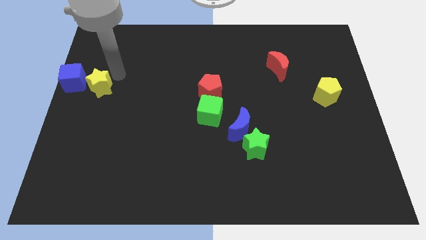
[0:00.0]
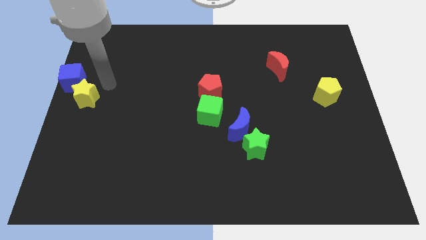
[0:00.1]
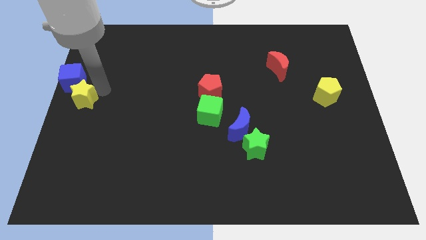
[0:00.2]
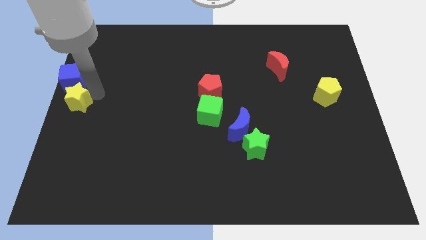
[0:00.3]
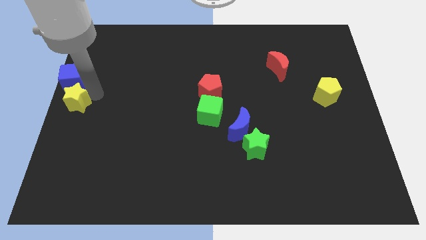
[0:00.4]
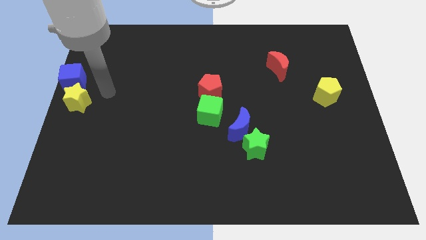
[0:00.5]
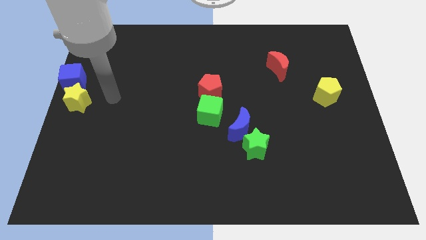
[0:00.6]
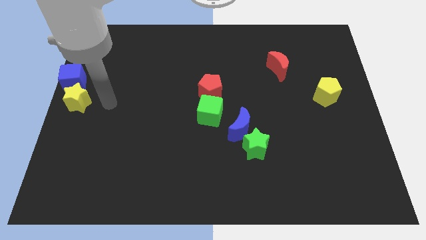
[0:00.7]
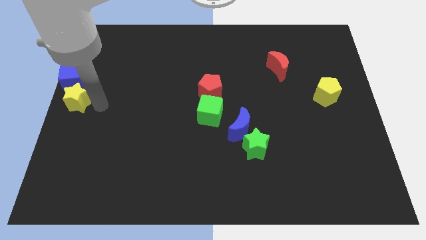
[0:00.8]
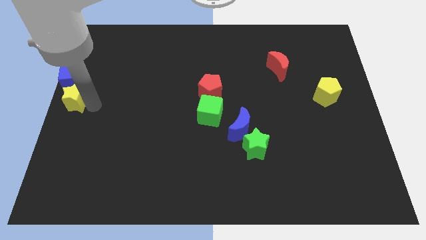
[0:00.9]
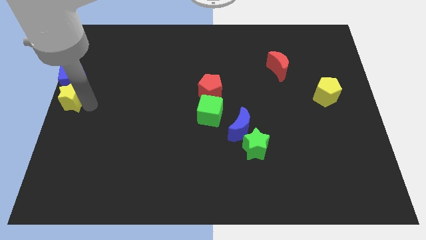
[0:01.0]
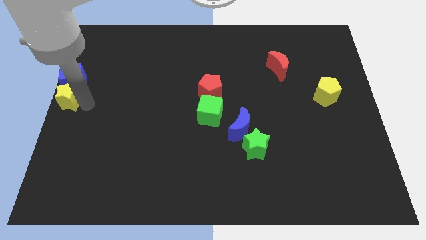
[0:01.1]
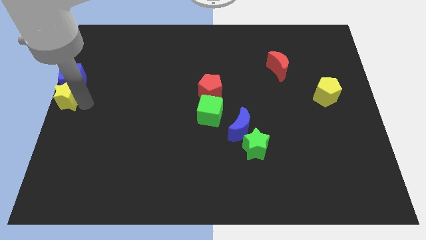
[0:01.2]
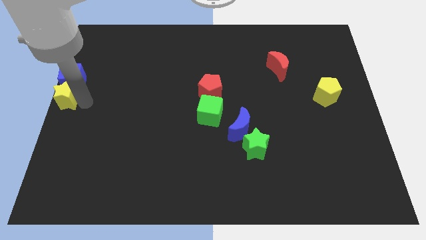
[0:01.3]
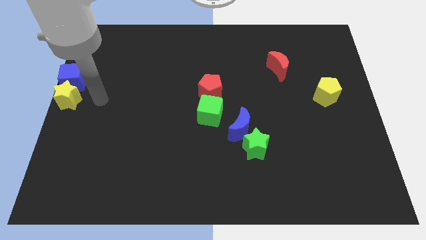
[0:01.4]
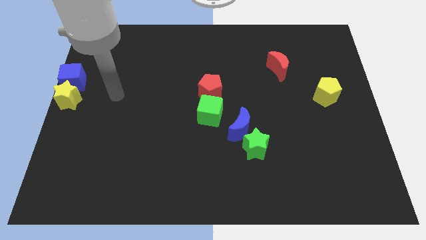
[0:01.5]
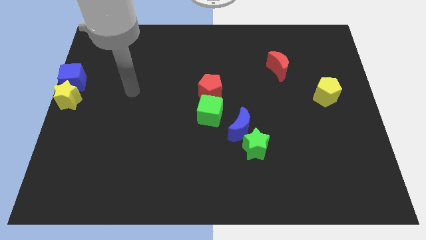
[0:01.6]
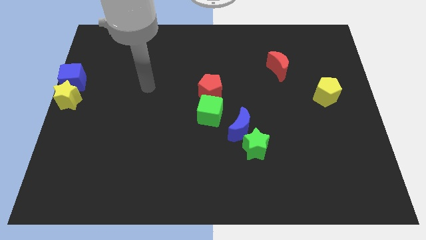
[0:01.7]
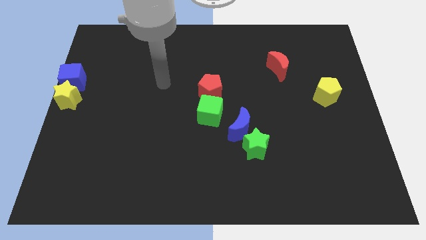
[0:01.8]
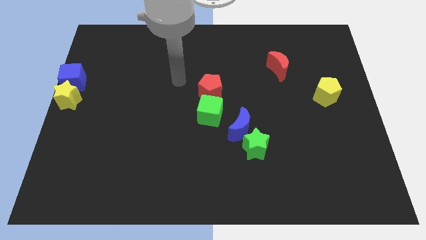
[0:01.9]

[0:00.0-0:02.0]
move the yellow star to the bottom of the blue cube

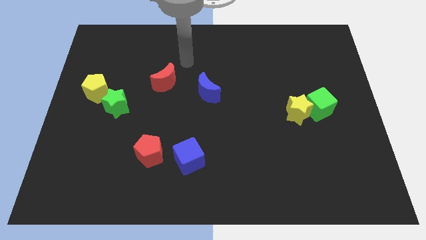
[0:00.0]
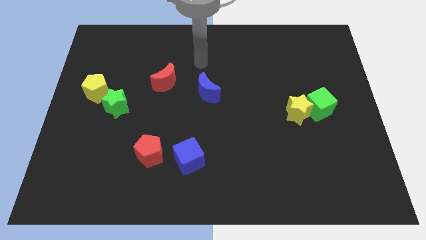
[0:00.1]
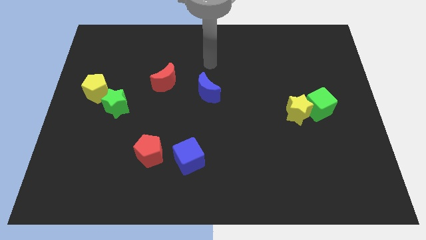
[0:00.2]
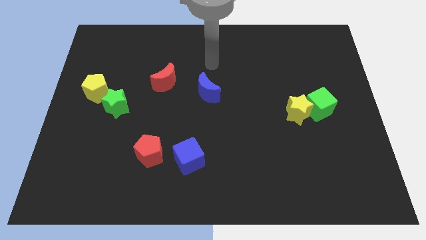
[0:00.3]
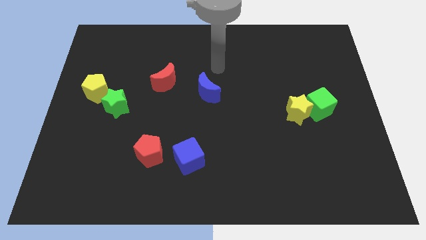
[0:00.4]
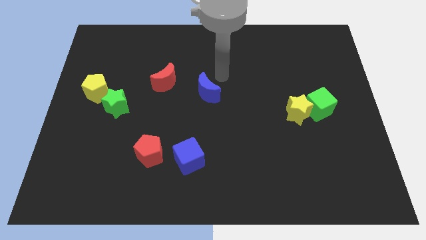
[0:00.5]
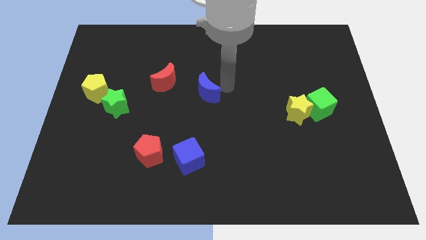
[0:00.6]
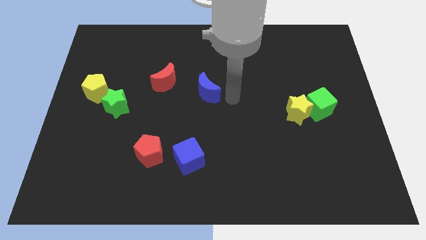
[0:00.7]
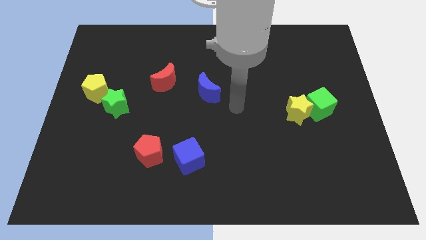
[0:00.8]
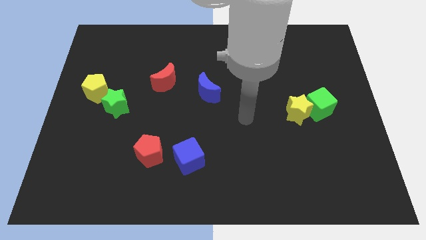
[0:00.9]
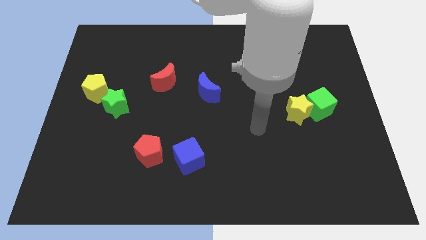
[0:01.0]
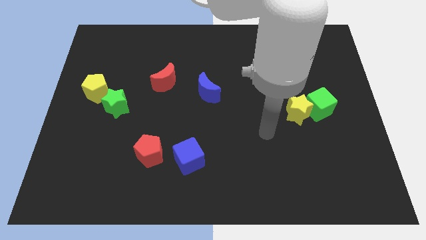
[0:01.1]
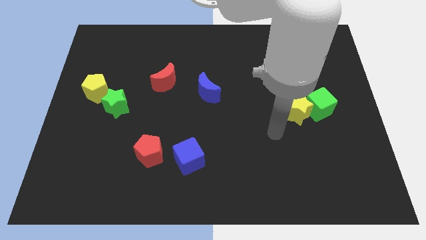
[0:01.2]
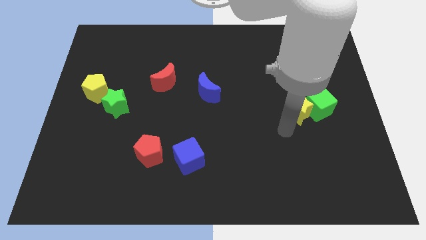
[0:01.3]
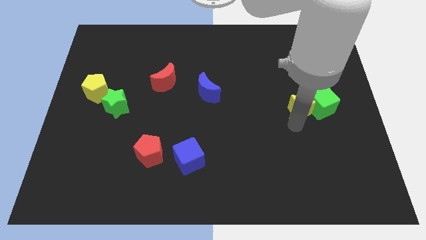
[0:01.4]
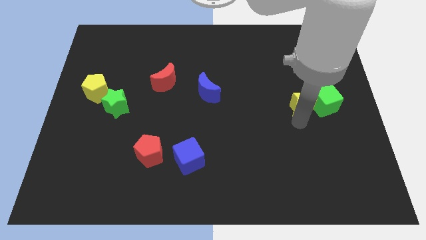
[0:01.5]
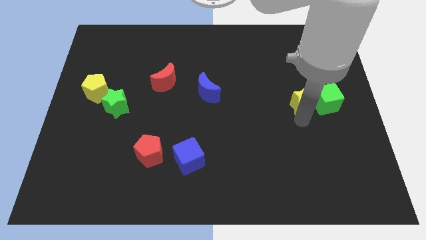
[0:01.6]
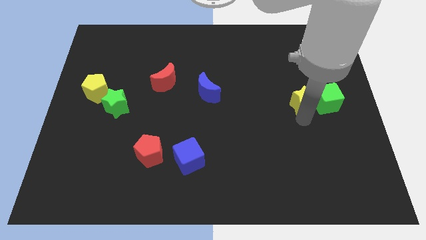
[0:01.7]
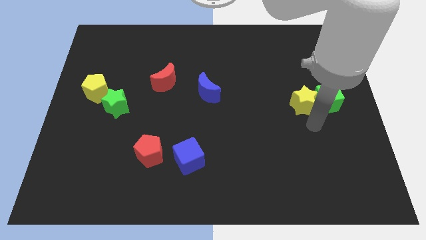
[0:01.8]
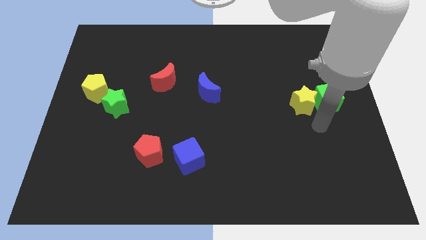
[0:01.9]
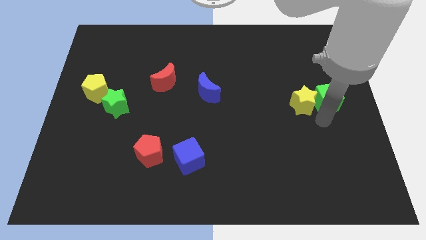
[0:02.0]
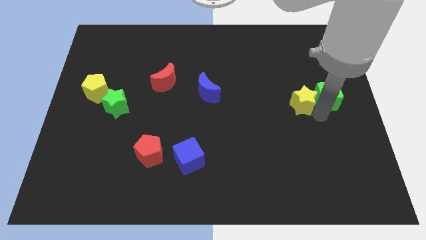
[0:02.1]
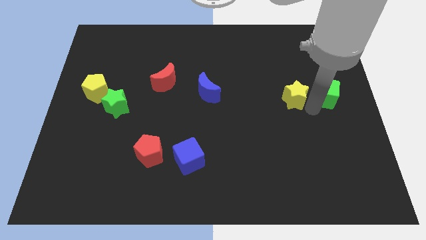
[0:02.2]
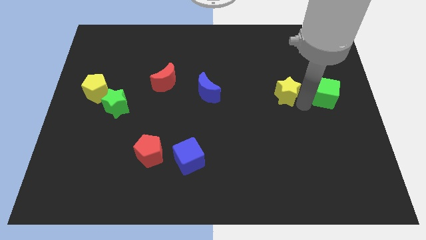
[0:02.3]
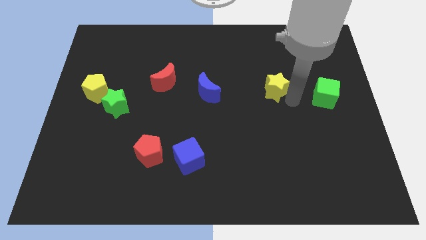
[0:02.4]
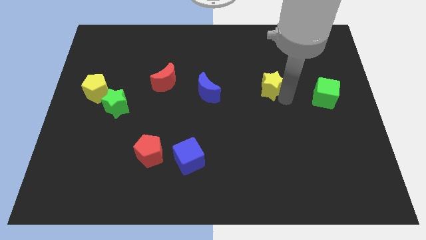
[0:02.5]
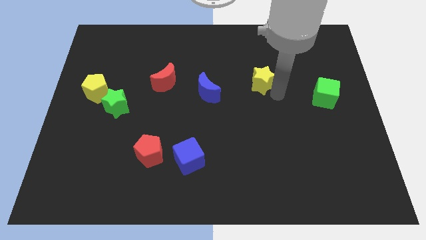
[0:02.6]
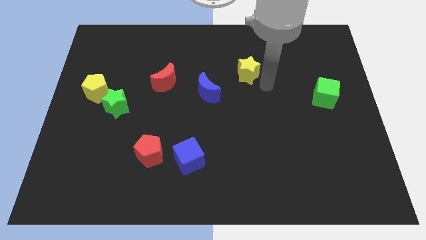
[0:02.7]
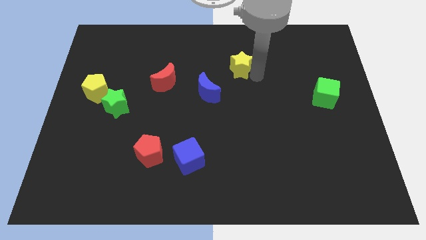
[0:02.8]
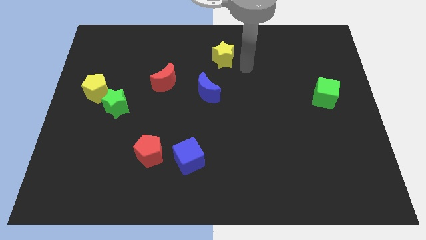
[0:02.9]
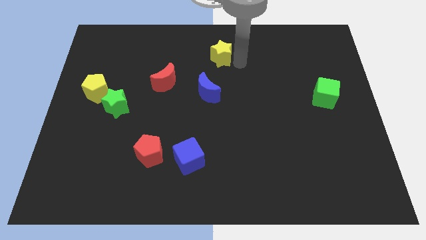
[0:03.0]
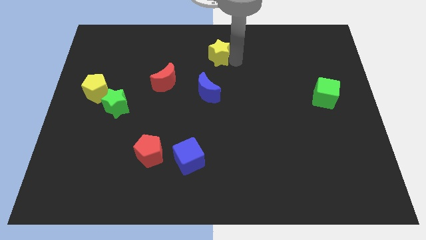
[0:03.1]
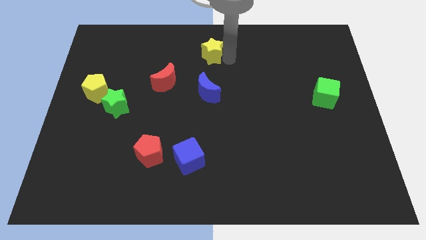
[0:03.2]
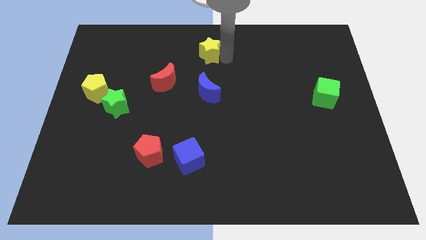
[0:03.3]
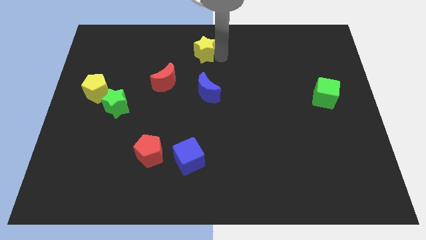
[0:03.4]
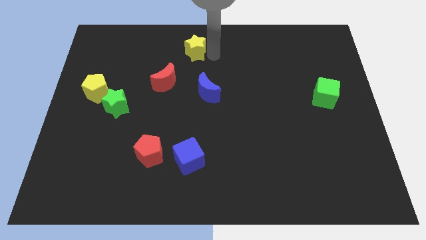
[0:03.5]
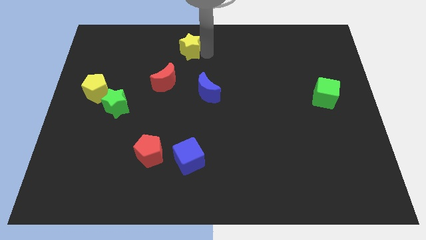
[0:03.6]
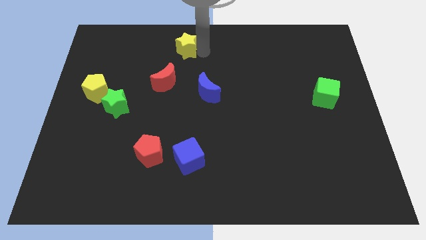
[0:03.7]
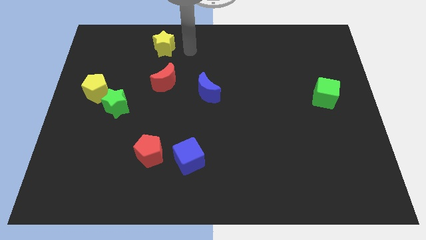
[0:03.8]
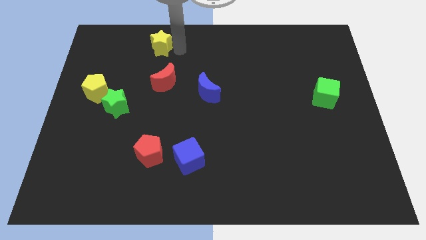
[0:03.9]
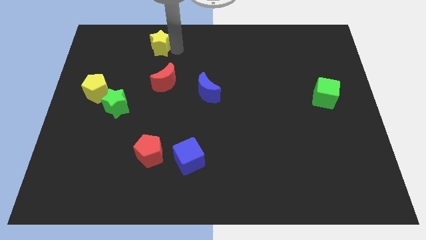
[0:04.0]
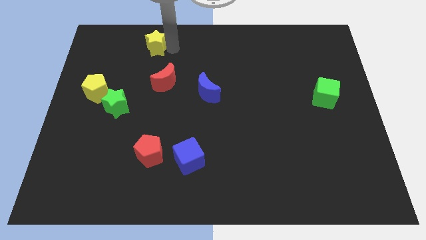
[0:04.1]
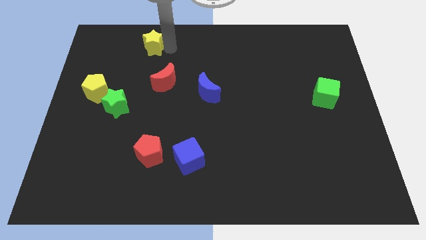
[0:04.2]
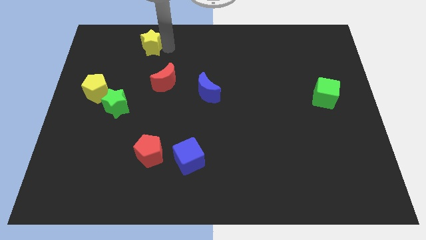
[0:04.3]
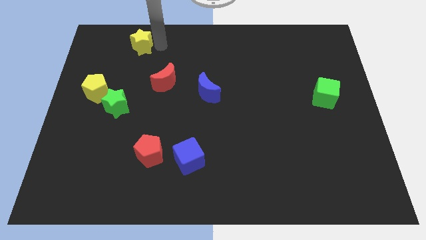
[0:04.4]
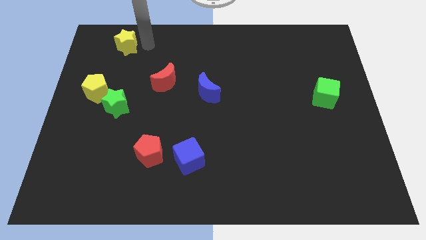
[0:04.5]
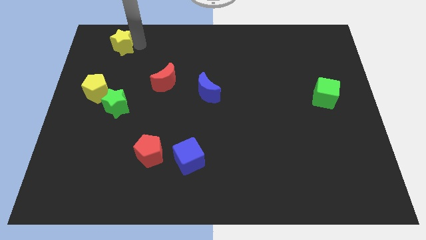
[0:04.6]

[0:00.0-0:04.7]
place the yellow star above the green star

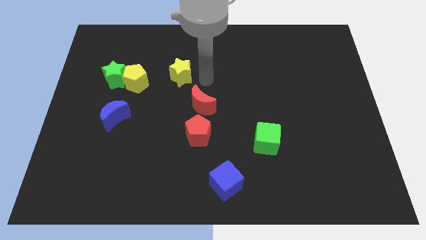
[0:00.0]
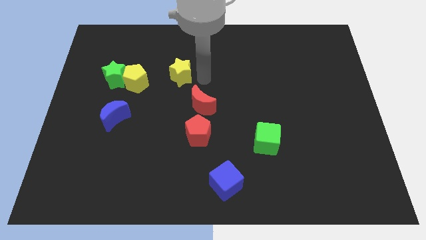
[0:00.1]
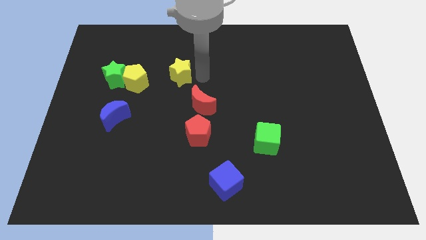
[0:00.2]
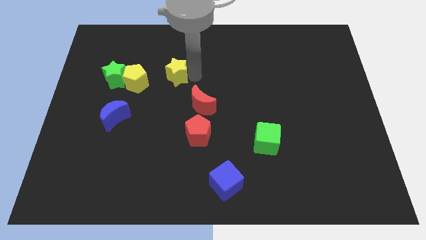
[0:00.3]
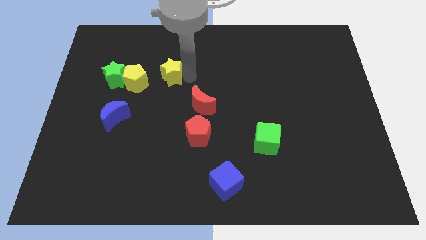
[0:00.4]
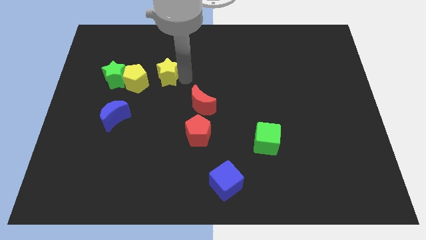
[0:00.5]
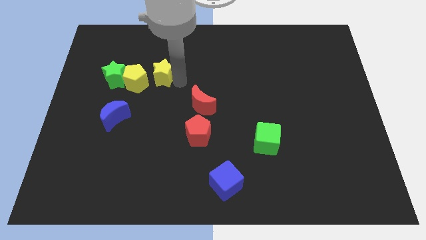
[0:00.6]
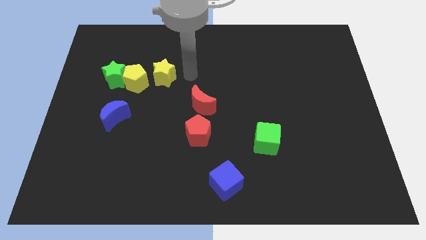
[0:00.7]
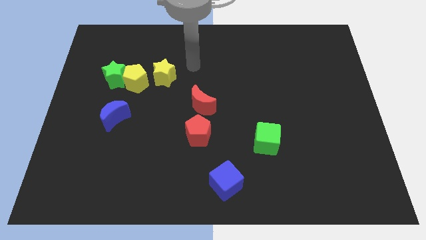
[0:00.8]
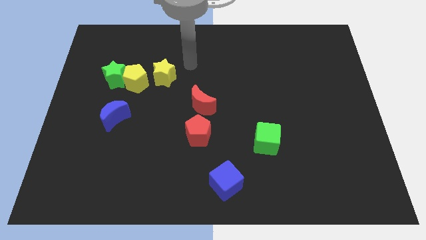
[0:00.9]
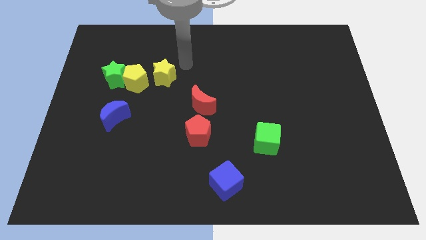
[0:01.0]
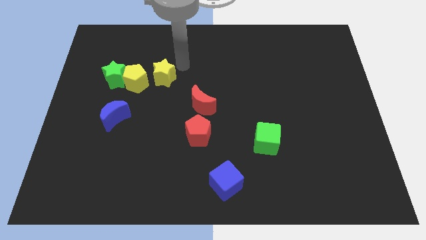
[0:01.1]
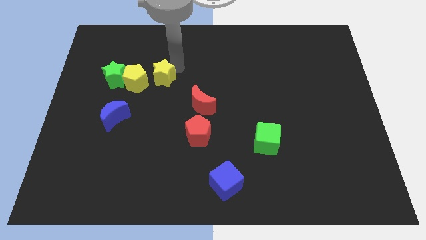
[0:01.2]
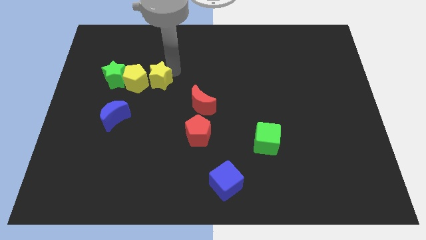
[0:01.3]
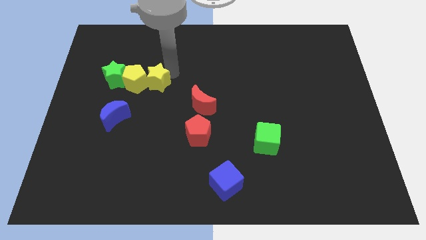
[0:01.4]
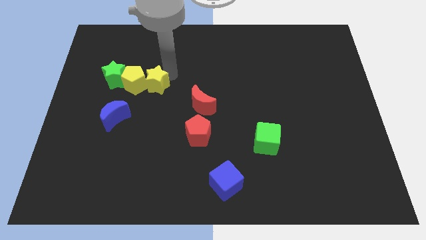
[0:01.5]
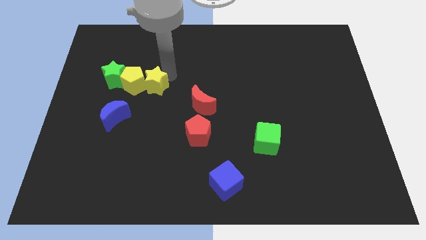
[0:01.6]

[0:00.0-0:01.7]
push the yellow star into the yellow pentagon

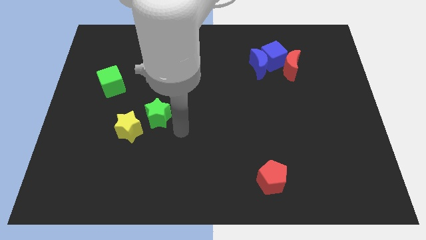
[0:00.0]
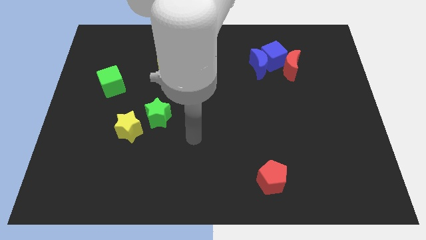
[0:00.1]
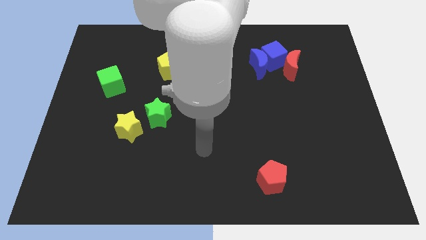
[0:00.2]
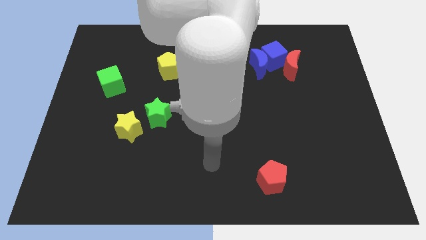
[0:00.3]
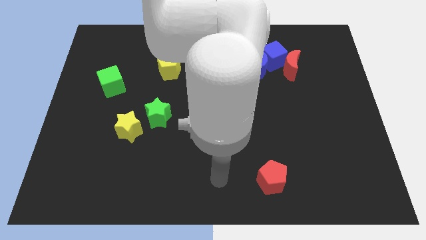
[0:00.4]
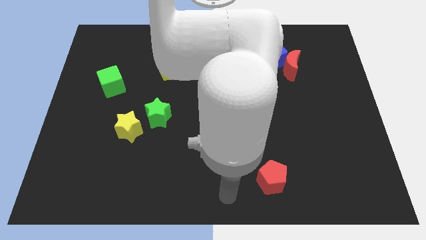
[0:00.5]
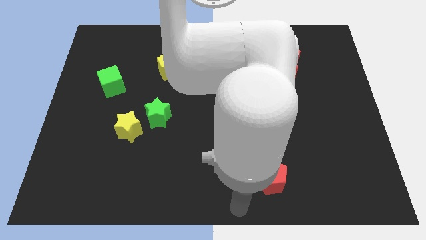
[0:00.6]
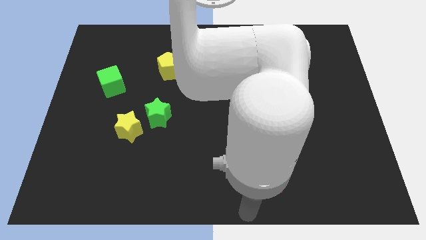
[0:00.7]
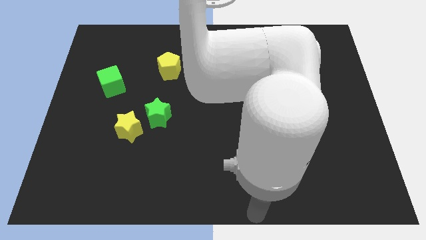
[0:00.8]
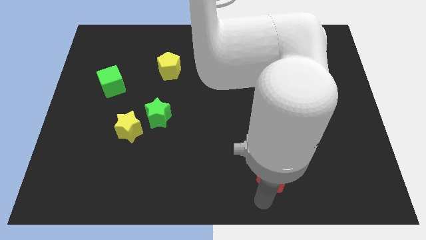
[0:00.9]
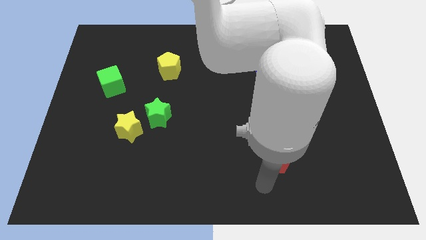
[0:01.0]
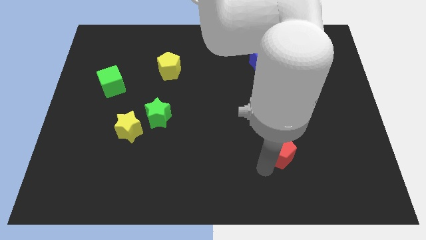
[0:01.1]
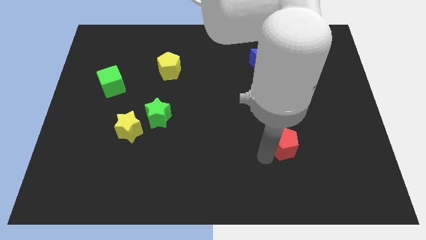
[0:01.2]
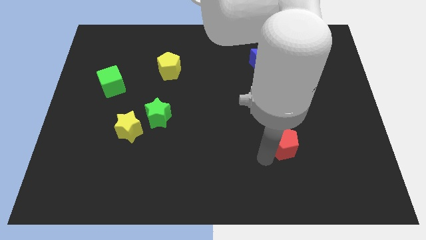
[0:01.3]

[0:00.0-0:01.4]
place your arm below red pentagon
